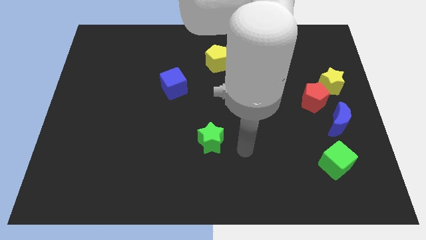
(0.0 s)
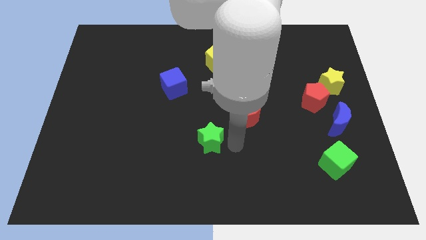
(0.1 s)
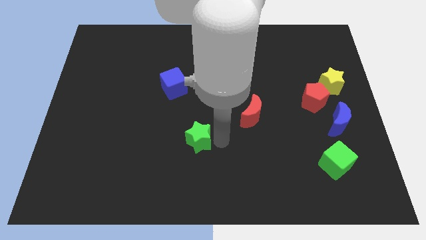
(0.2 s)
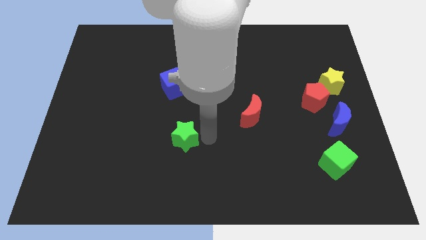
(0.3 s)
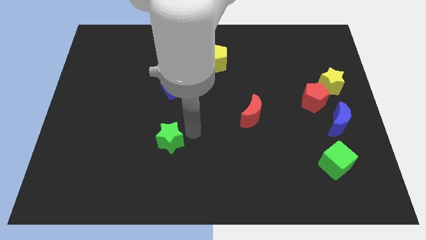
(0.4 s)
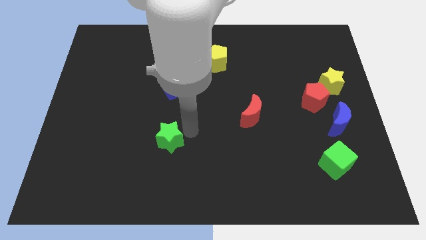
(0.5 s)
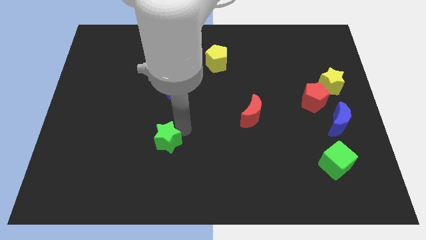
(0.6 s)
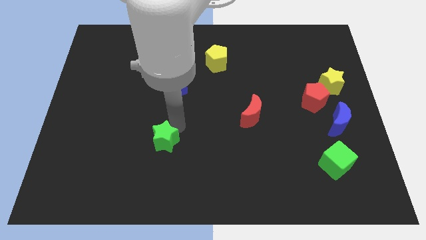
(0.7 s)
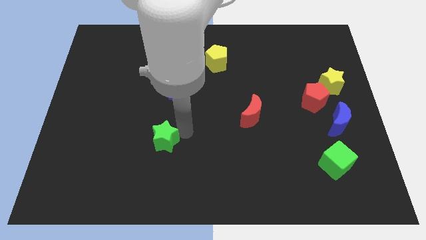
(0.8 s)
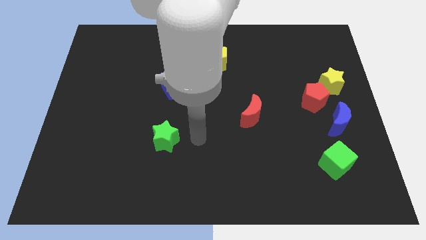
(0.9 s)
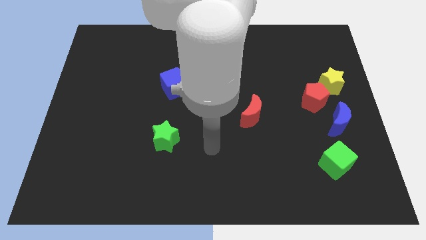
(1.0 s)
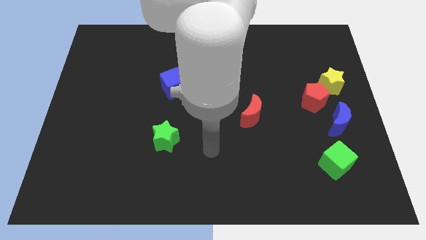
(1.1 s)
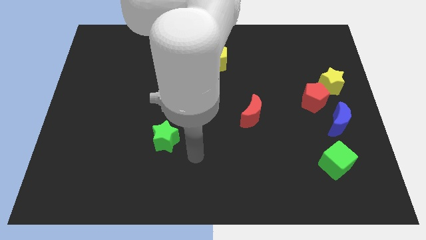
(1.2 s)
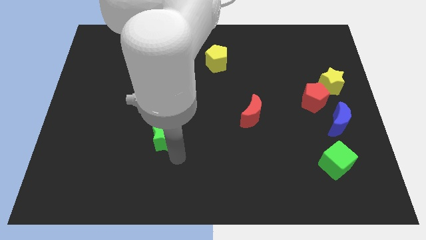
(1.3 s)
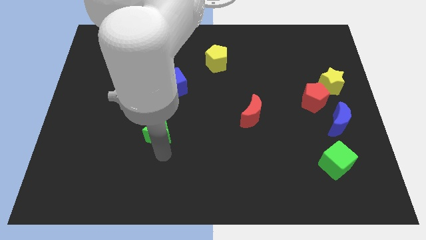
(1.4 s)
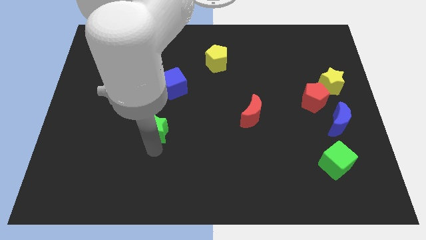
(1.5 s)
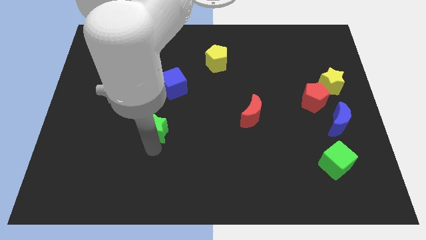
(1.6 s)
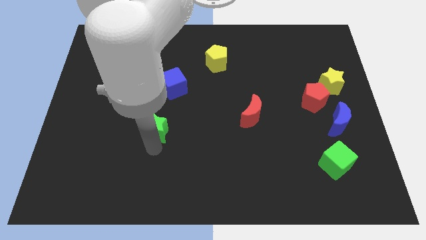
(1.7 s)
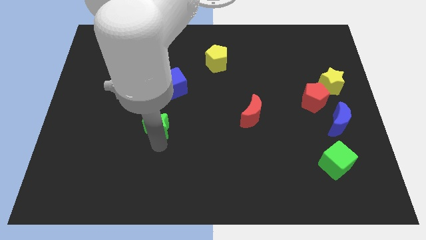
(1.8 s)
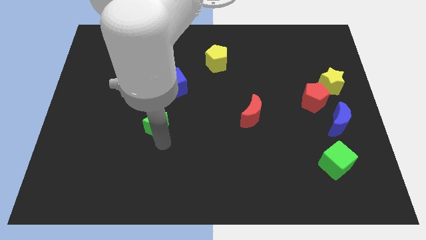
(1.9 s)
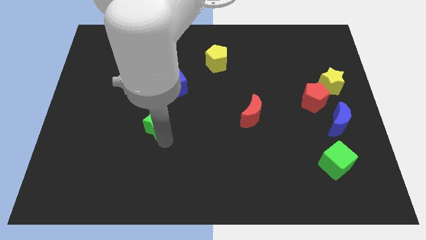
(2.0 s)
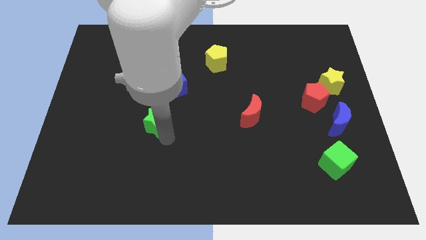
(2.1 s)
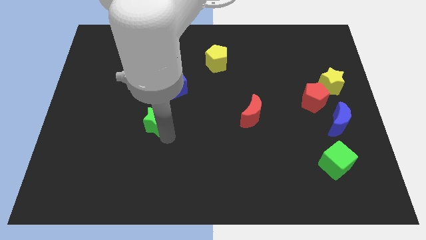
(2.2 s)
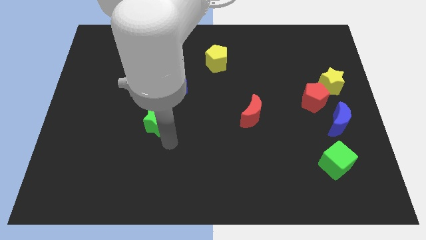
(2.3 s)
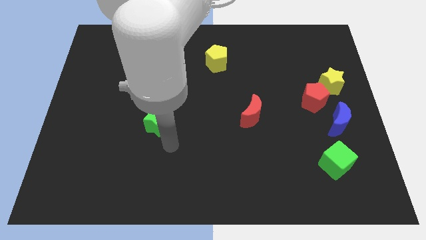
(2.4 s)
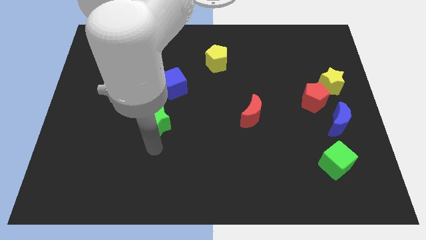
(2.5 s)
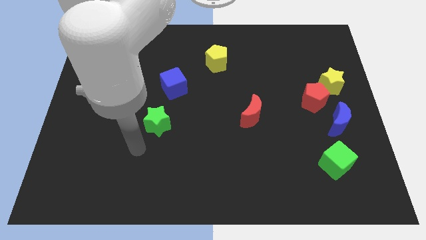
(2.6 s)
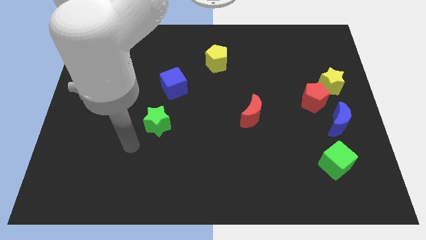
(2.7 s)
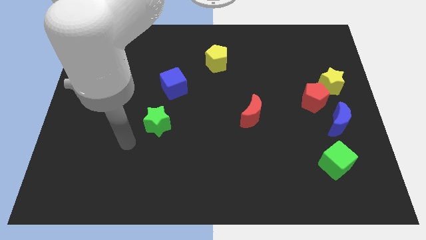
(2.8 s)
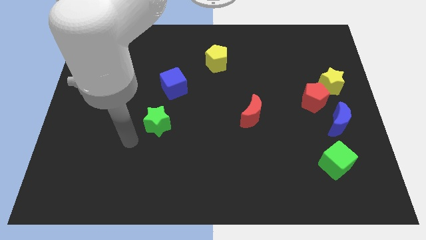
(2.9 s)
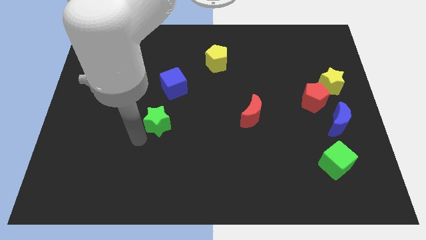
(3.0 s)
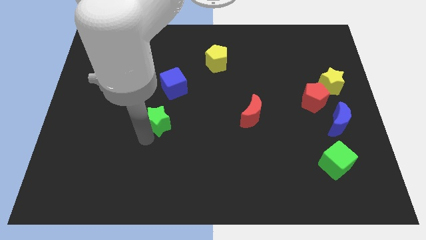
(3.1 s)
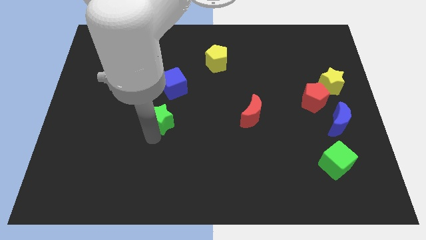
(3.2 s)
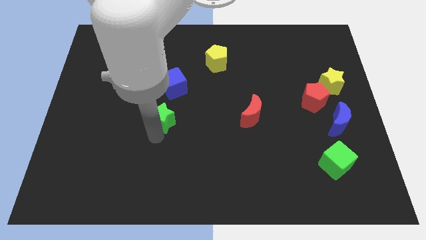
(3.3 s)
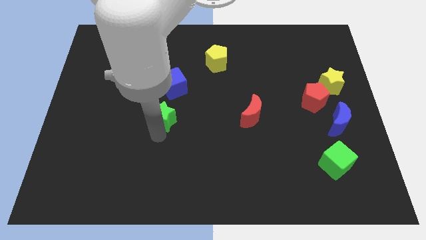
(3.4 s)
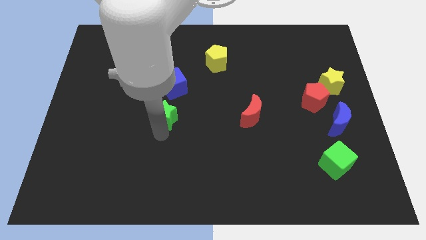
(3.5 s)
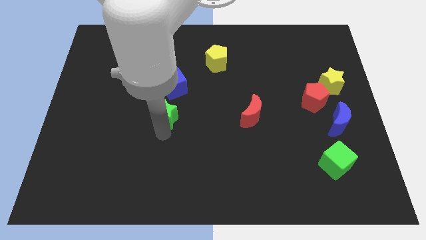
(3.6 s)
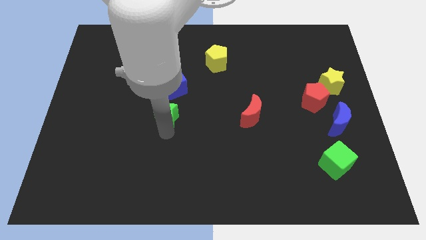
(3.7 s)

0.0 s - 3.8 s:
place the green star below the blue cube

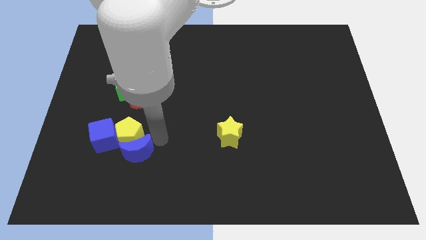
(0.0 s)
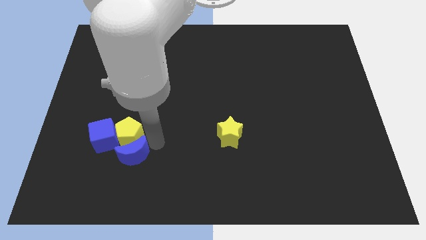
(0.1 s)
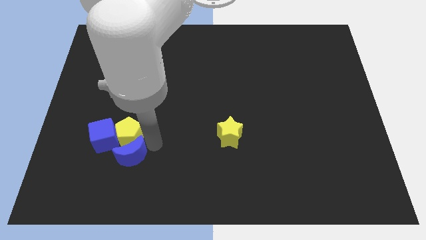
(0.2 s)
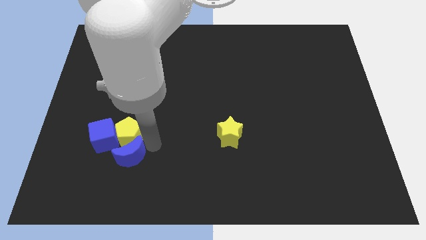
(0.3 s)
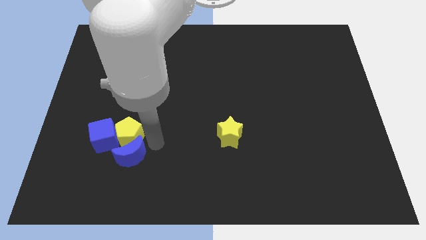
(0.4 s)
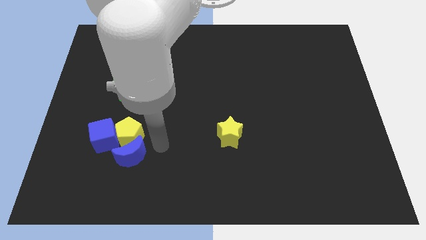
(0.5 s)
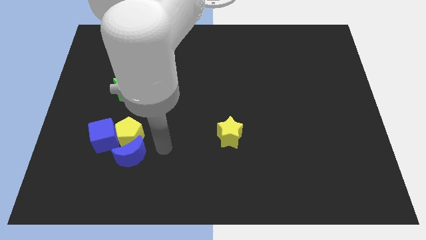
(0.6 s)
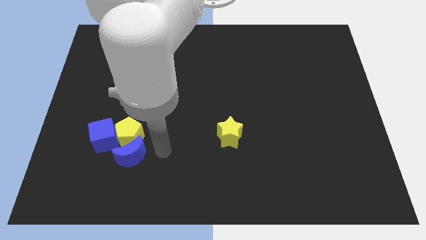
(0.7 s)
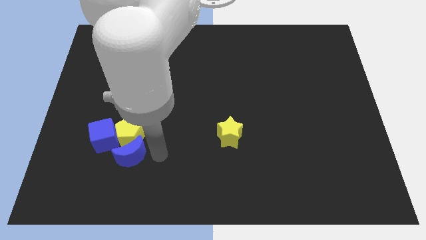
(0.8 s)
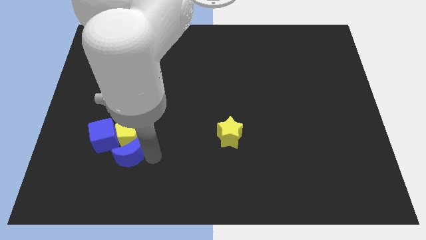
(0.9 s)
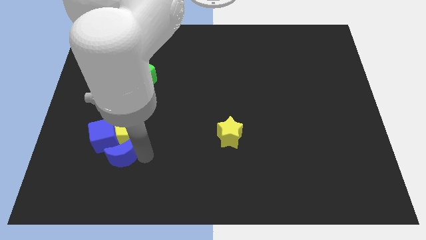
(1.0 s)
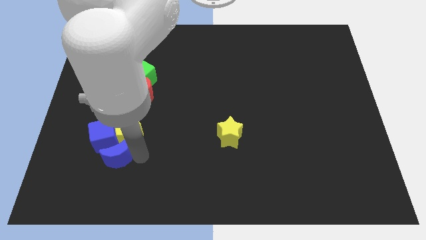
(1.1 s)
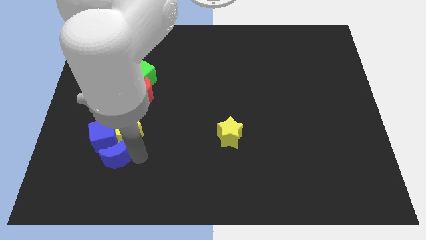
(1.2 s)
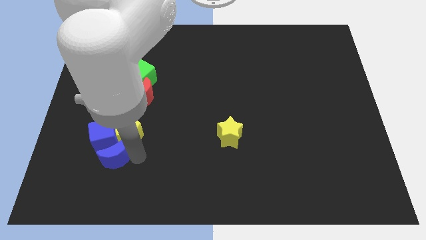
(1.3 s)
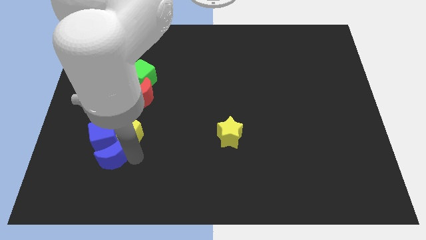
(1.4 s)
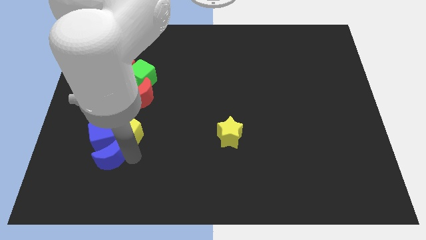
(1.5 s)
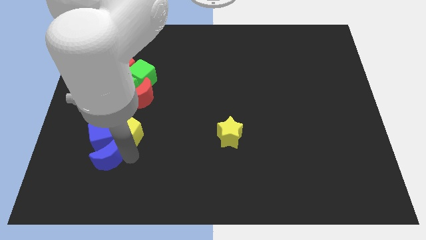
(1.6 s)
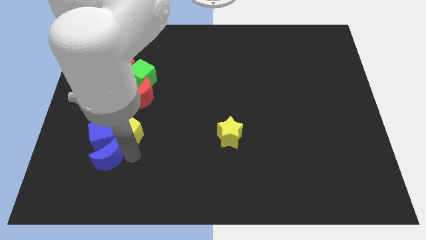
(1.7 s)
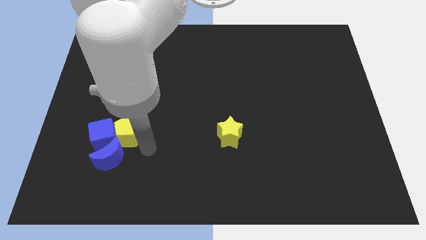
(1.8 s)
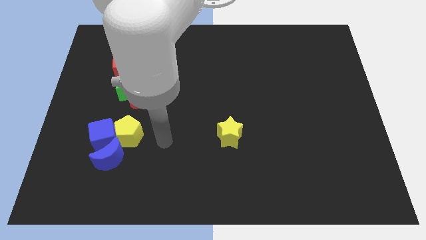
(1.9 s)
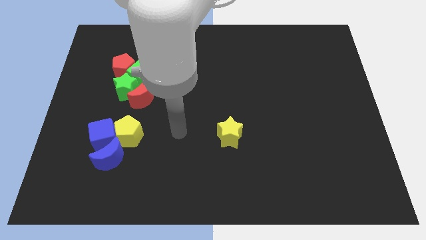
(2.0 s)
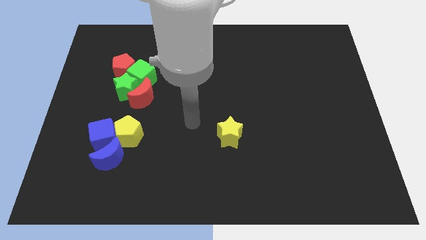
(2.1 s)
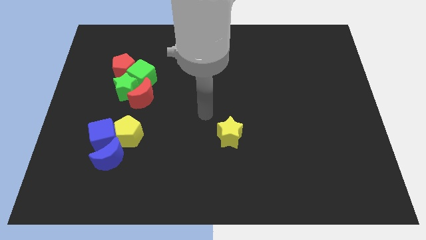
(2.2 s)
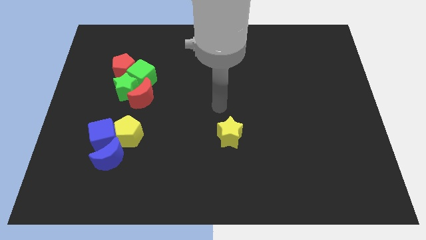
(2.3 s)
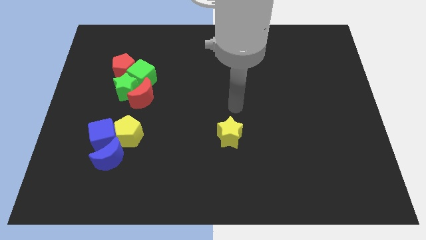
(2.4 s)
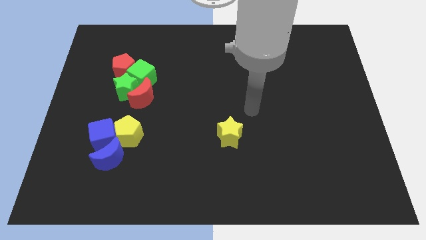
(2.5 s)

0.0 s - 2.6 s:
place the blue crescent below the blue cube

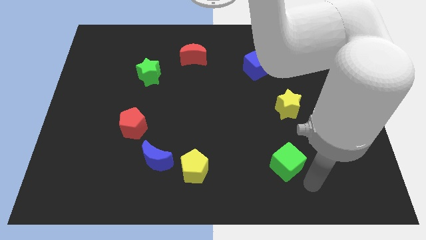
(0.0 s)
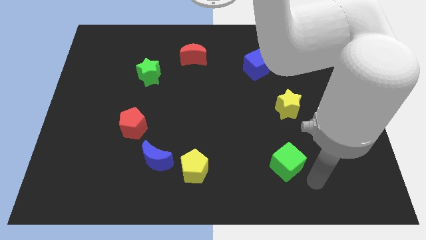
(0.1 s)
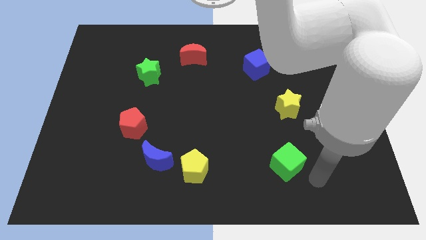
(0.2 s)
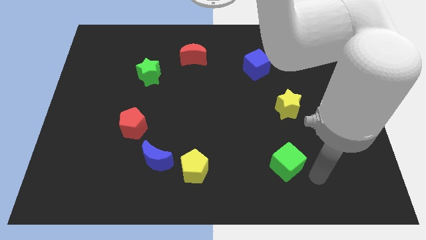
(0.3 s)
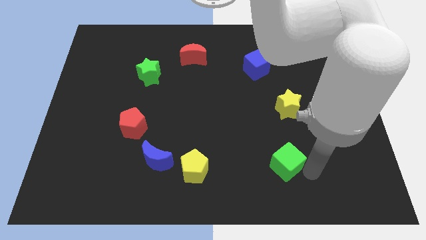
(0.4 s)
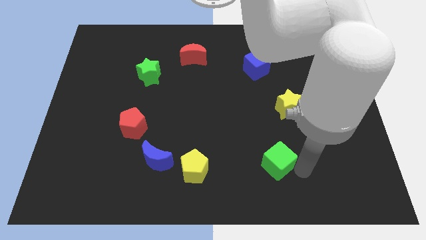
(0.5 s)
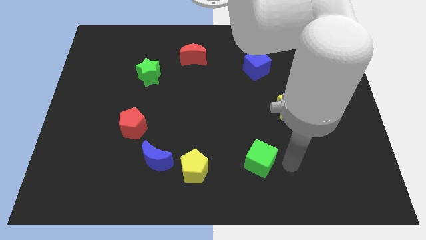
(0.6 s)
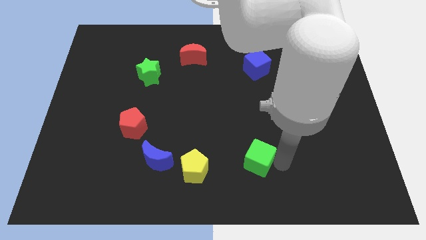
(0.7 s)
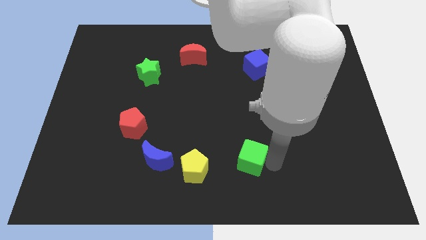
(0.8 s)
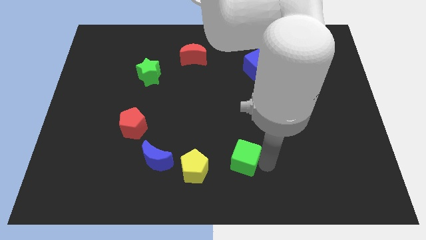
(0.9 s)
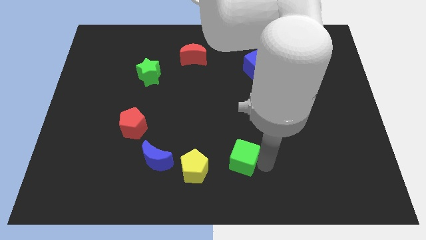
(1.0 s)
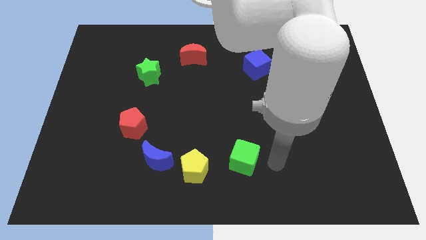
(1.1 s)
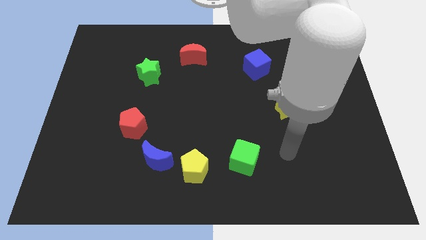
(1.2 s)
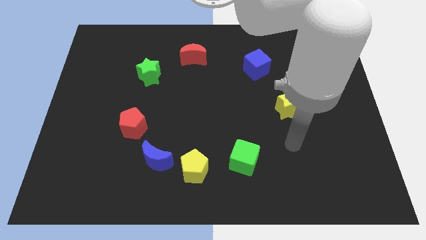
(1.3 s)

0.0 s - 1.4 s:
push the green cube close to the yellow pentagon

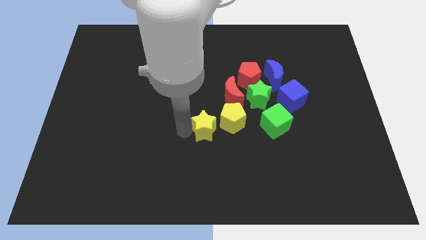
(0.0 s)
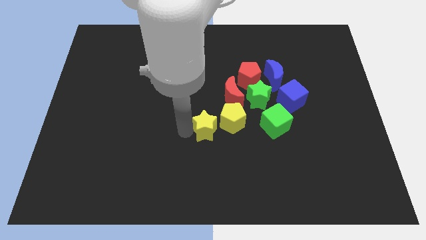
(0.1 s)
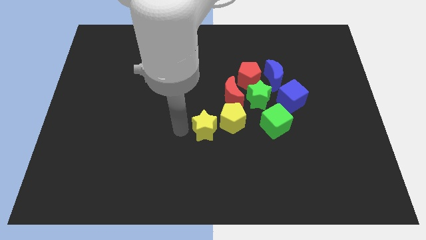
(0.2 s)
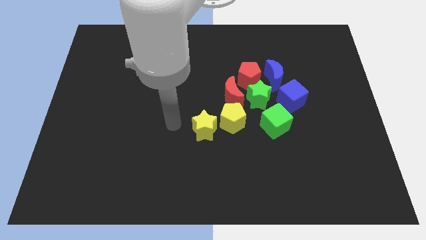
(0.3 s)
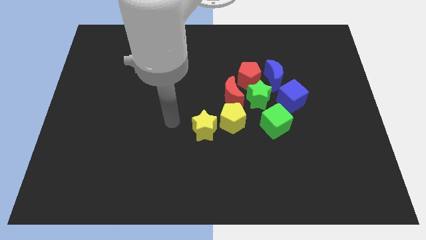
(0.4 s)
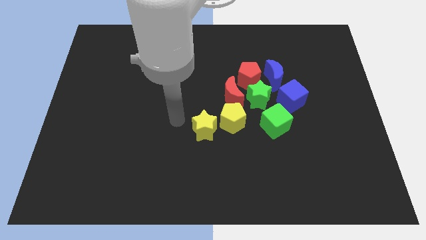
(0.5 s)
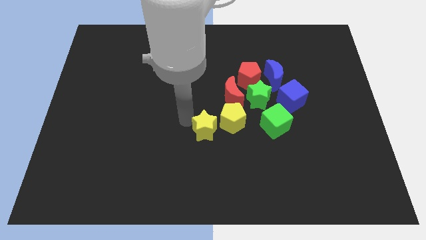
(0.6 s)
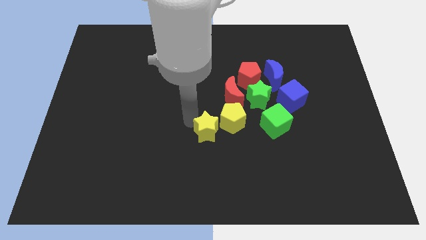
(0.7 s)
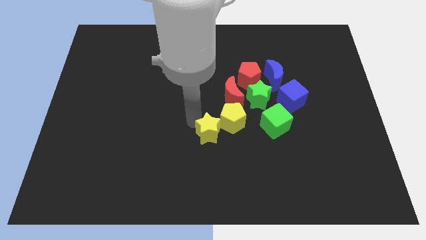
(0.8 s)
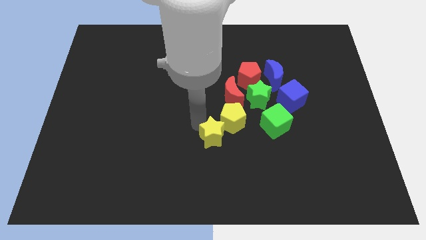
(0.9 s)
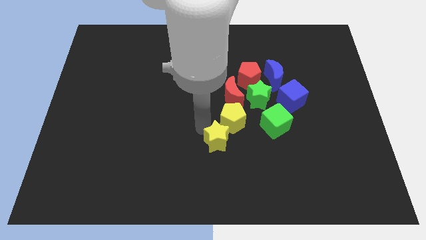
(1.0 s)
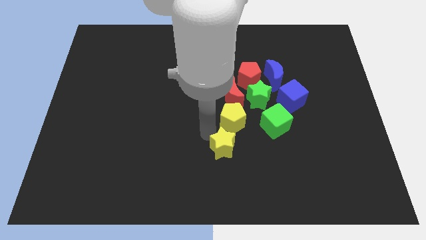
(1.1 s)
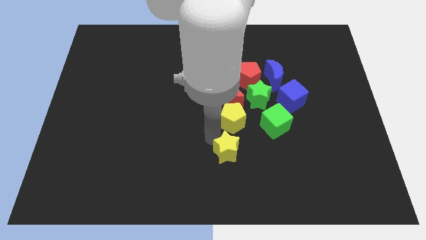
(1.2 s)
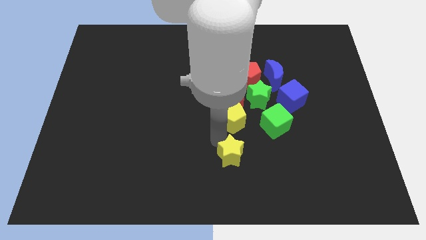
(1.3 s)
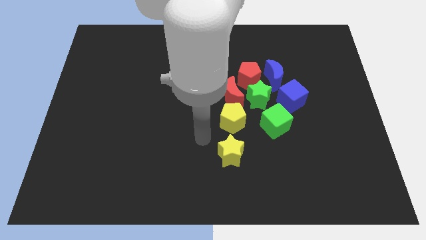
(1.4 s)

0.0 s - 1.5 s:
slide the yellow star at the bottom of the yellow pentagon
